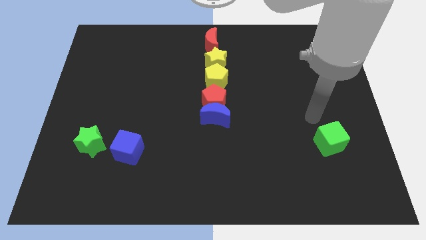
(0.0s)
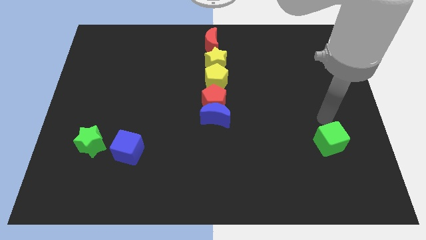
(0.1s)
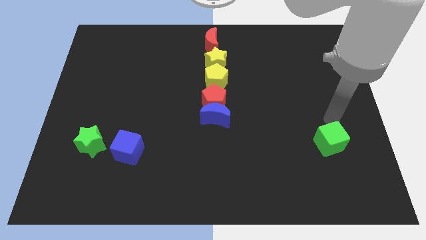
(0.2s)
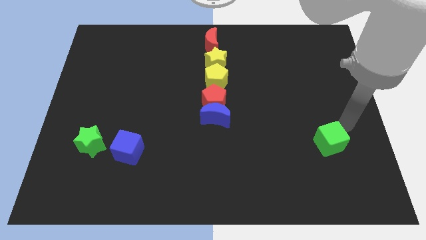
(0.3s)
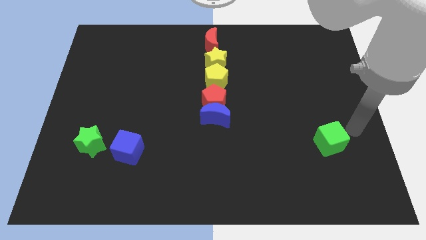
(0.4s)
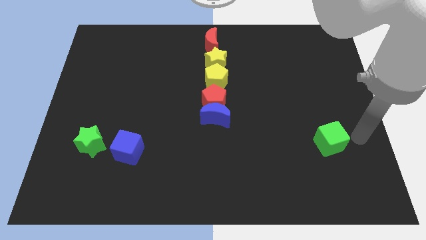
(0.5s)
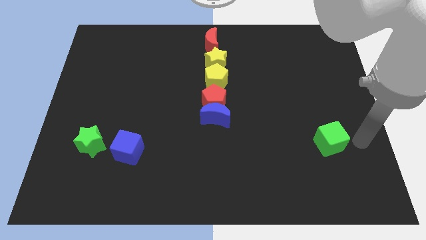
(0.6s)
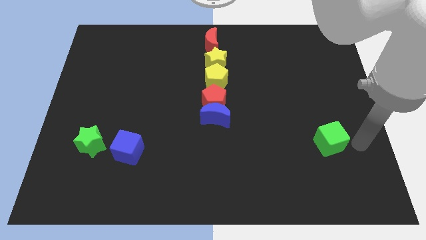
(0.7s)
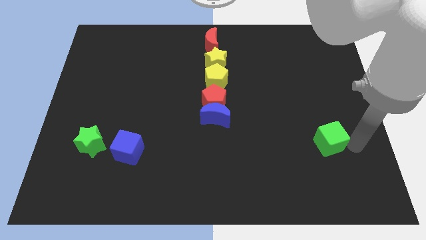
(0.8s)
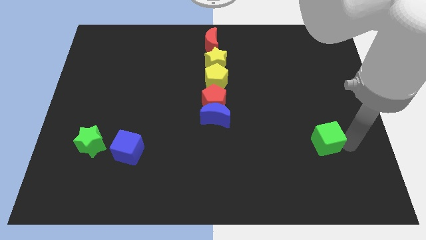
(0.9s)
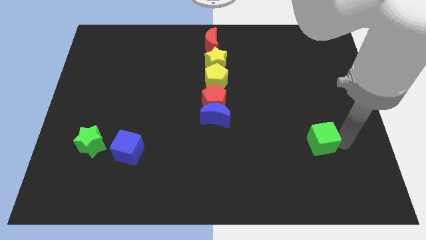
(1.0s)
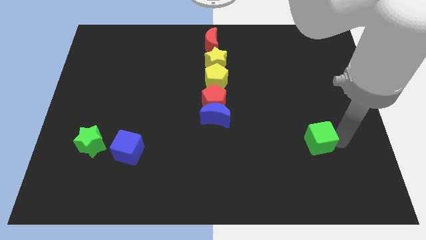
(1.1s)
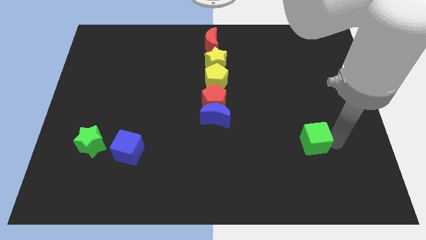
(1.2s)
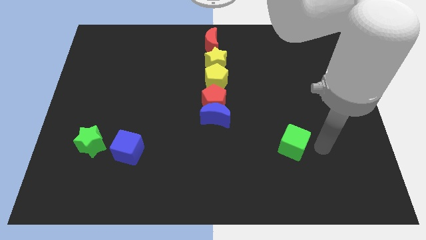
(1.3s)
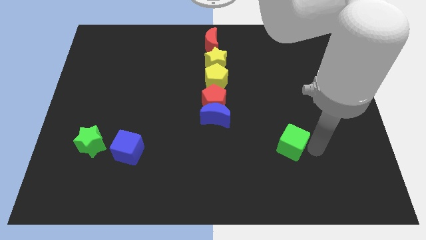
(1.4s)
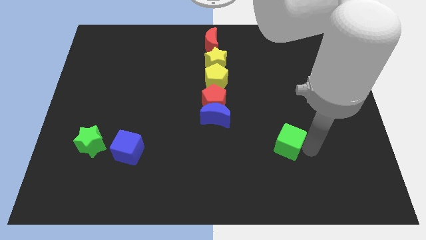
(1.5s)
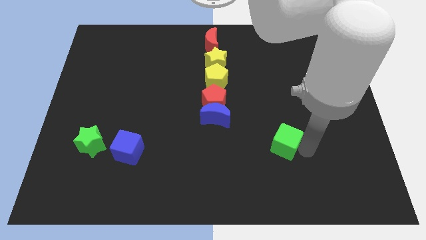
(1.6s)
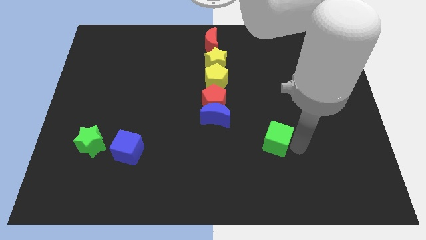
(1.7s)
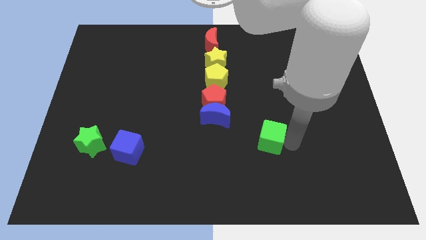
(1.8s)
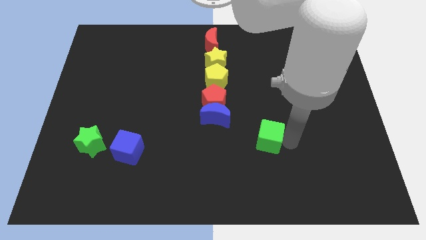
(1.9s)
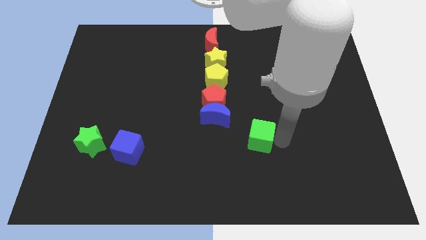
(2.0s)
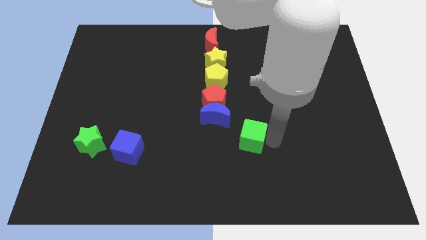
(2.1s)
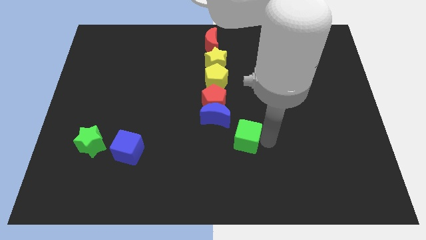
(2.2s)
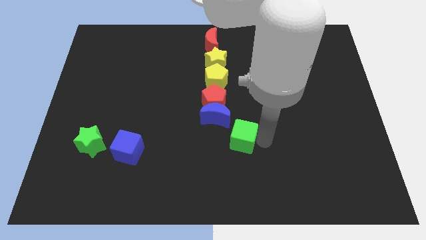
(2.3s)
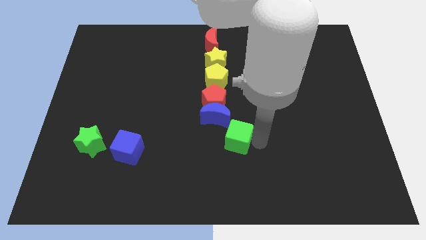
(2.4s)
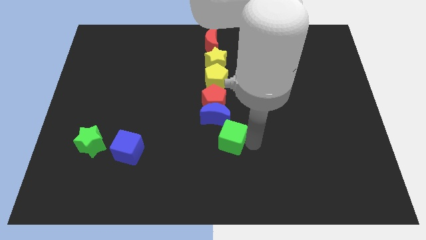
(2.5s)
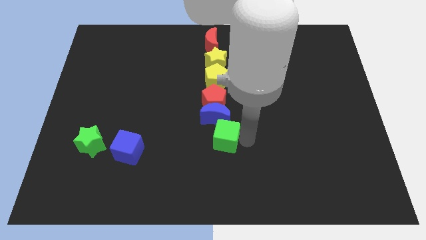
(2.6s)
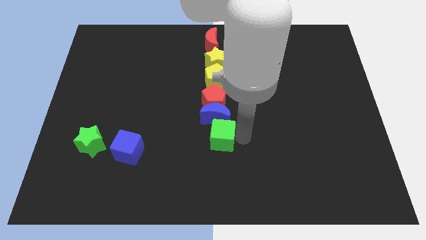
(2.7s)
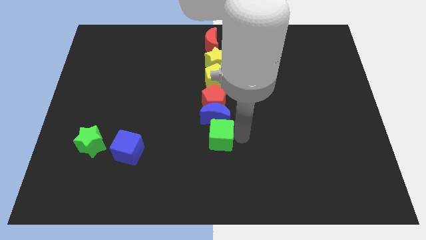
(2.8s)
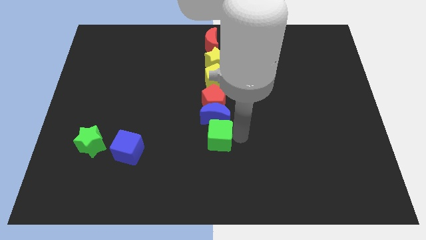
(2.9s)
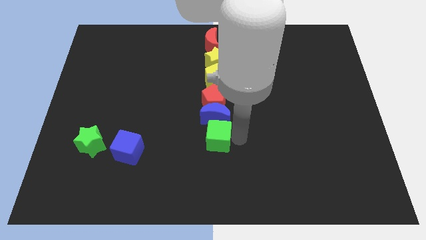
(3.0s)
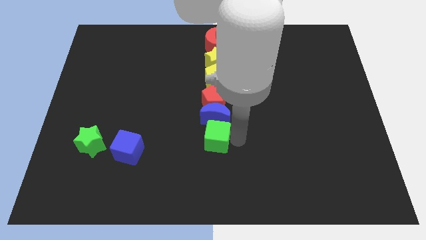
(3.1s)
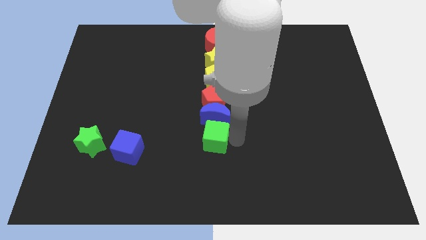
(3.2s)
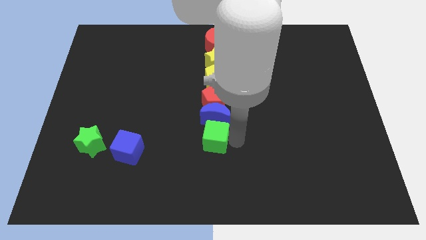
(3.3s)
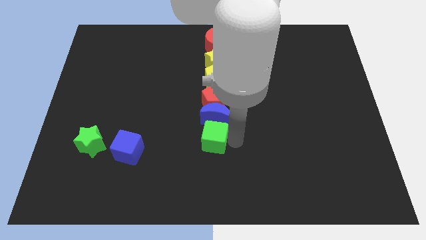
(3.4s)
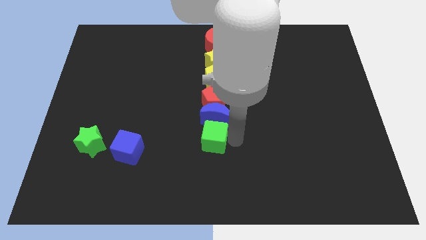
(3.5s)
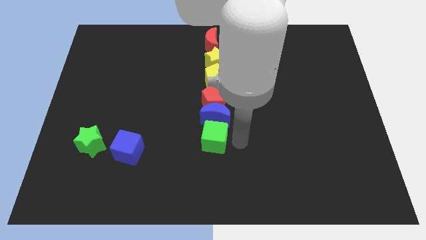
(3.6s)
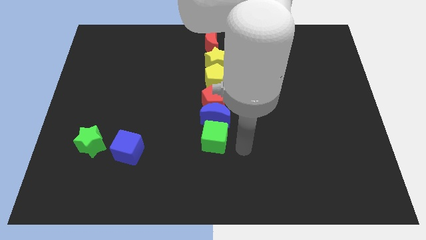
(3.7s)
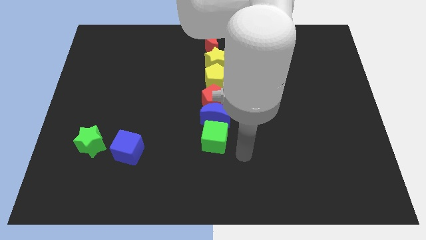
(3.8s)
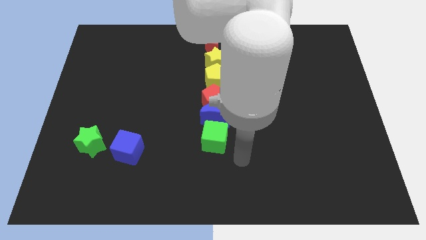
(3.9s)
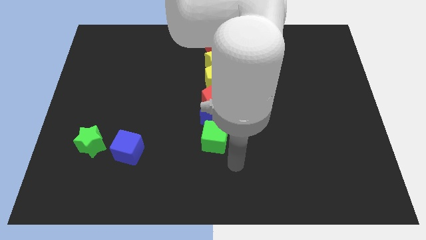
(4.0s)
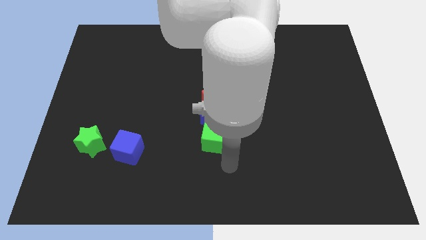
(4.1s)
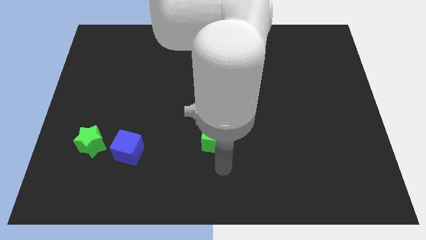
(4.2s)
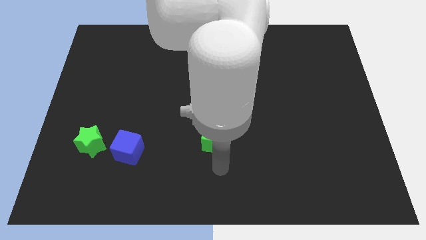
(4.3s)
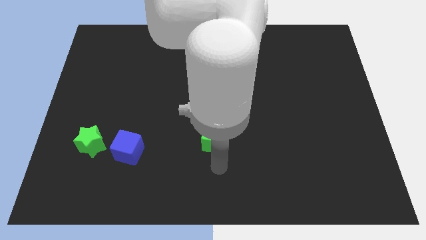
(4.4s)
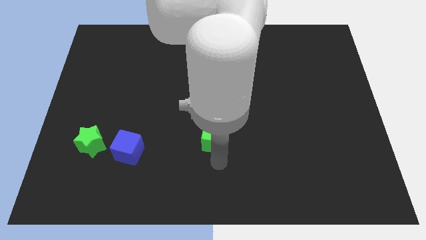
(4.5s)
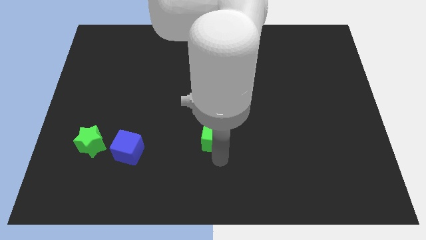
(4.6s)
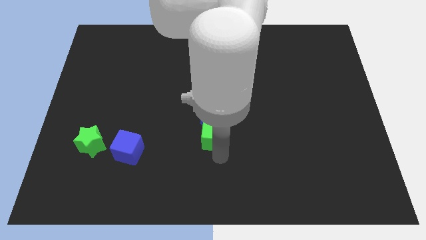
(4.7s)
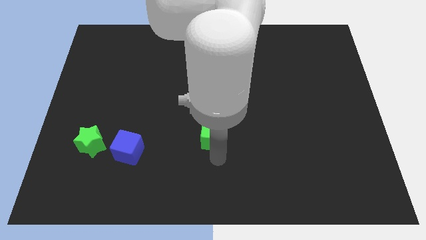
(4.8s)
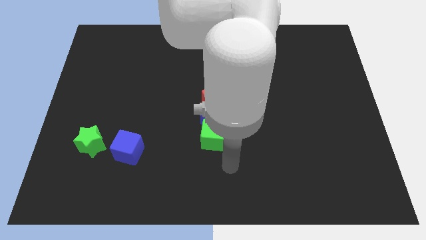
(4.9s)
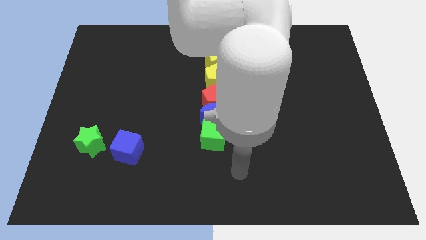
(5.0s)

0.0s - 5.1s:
push the green cube to the bottom side of the blue moon

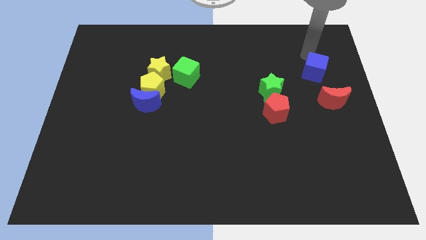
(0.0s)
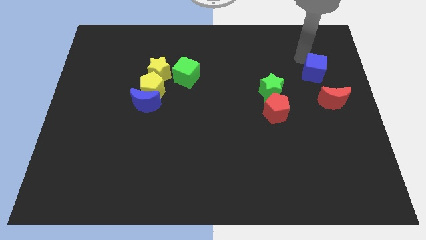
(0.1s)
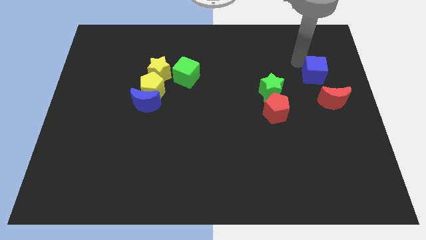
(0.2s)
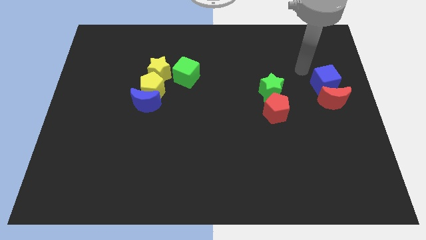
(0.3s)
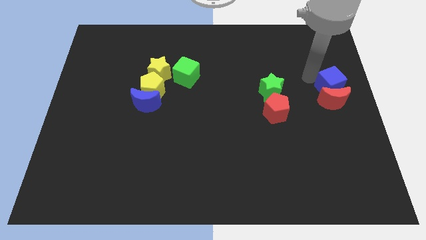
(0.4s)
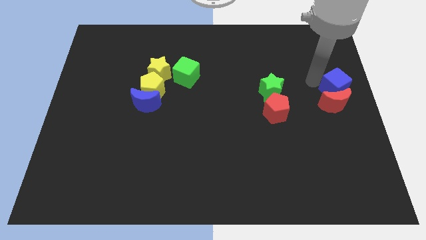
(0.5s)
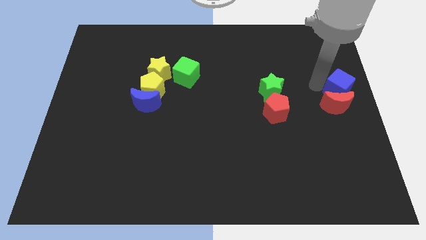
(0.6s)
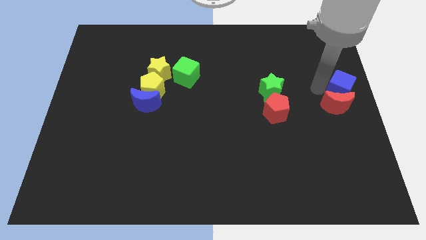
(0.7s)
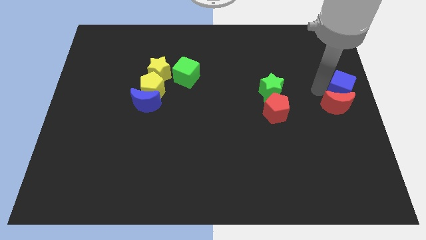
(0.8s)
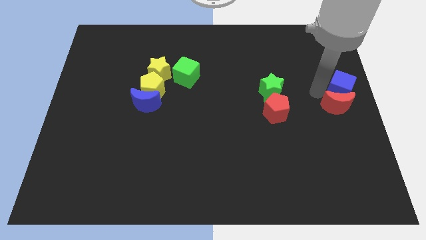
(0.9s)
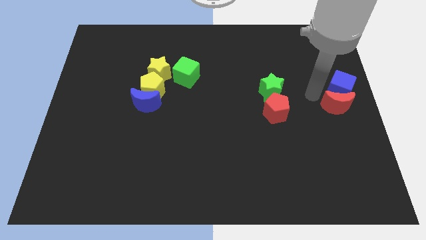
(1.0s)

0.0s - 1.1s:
push the blue cube into red crescent

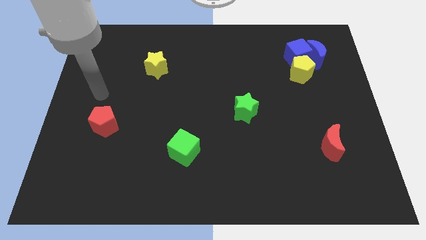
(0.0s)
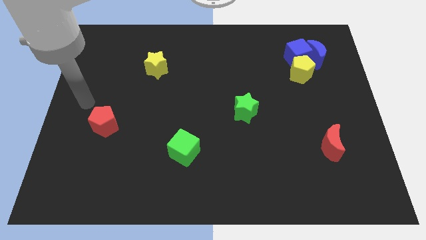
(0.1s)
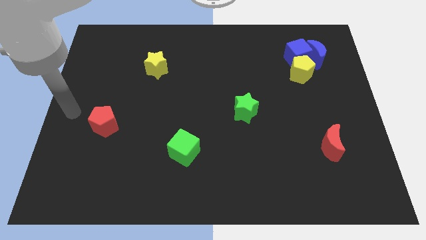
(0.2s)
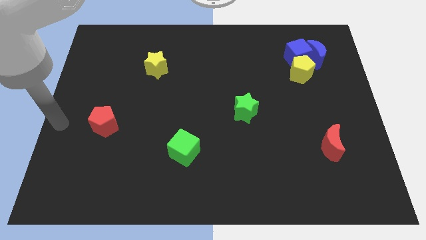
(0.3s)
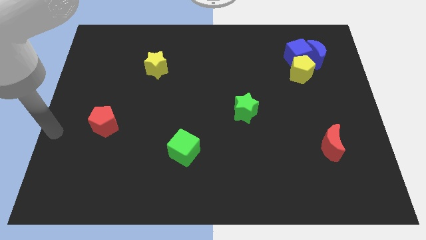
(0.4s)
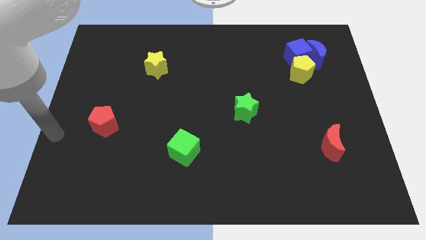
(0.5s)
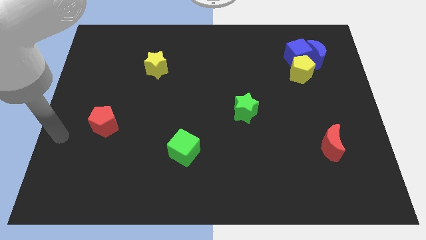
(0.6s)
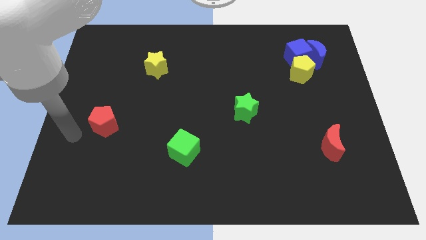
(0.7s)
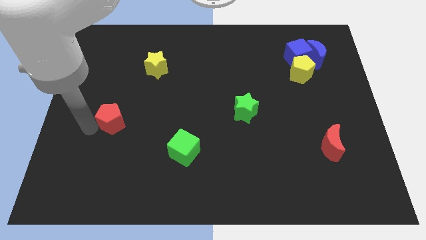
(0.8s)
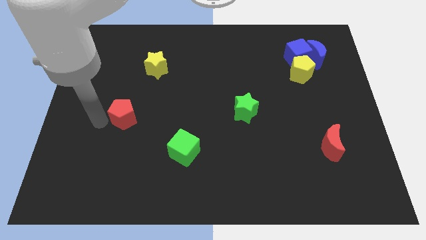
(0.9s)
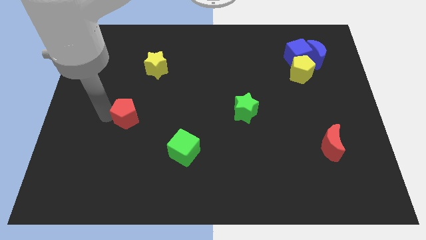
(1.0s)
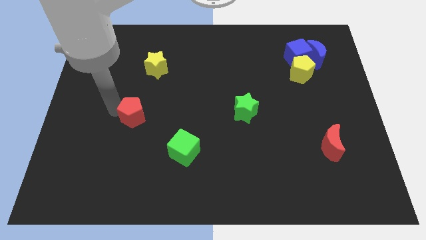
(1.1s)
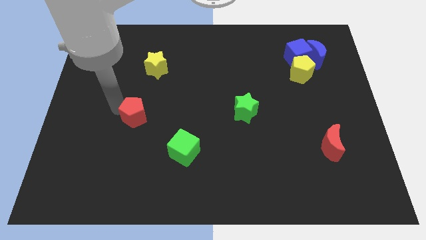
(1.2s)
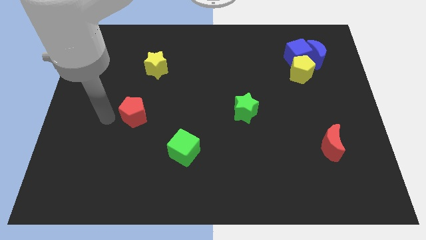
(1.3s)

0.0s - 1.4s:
slide the red pentagon slightly towards the right

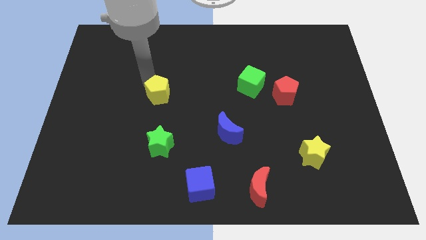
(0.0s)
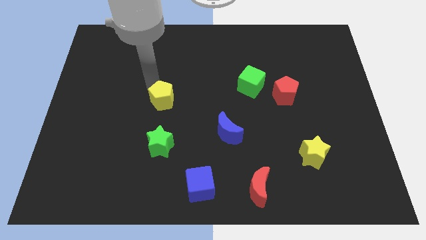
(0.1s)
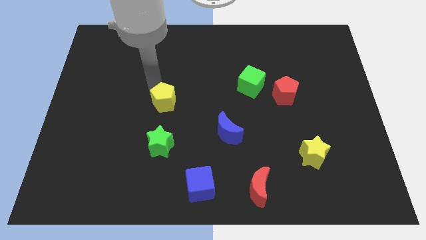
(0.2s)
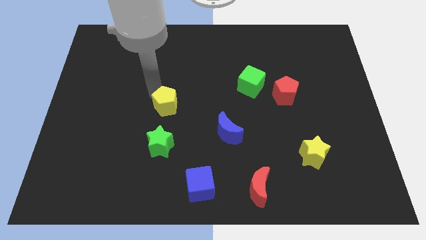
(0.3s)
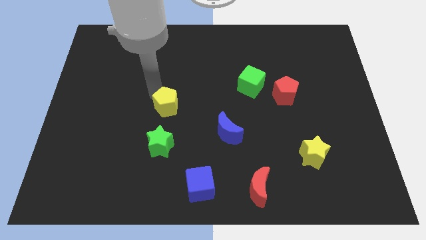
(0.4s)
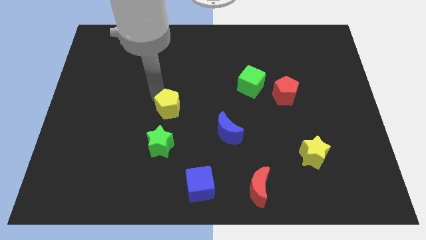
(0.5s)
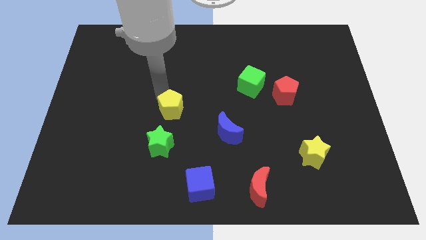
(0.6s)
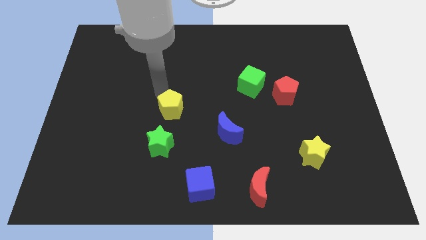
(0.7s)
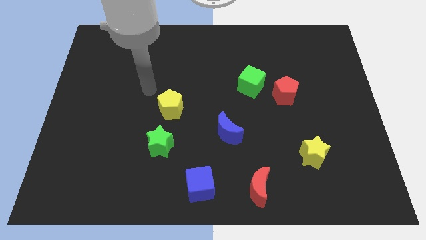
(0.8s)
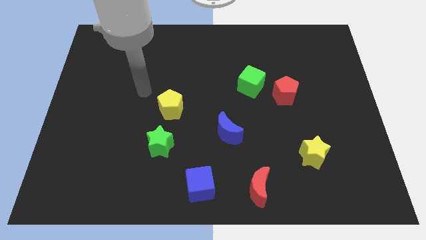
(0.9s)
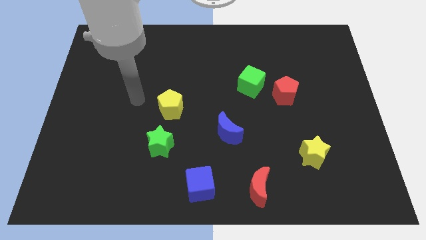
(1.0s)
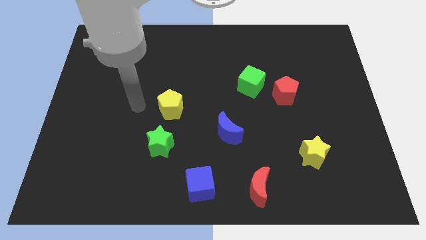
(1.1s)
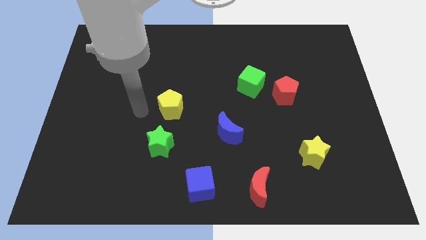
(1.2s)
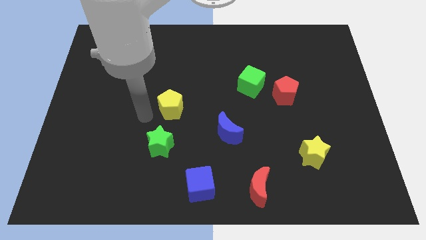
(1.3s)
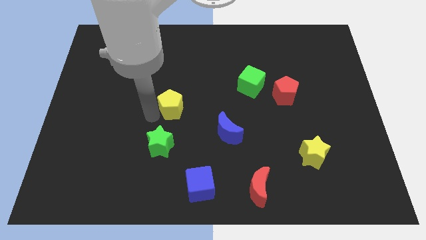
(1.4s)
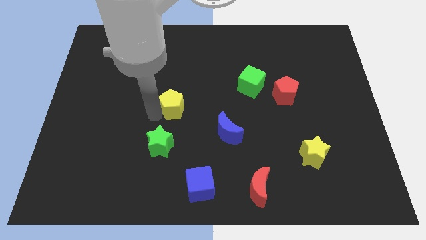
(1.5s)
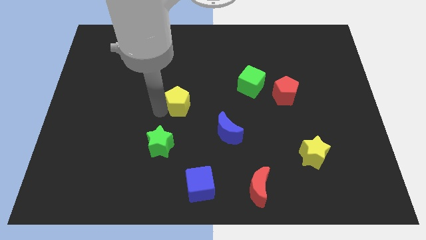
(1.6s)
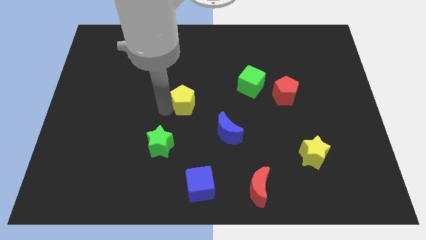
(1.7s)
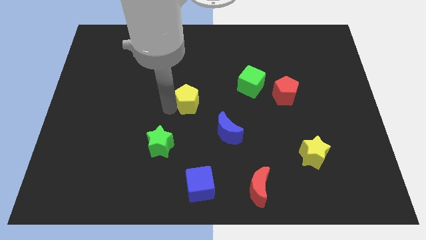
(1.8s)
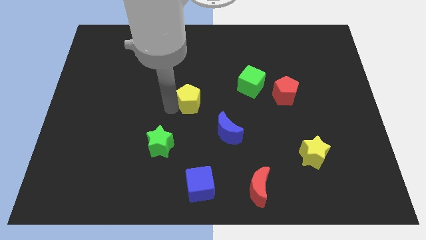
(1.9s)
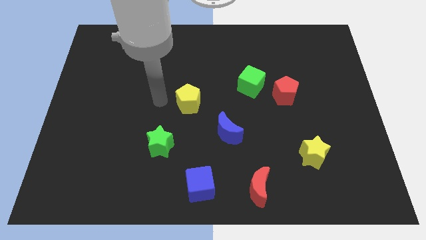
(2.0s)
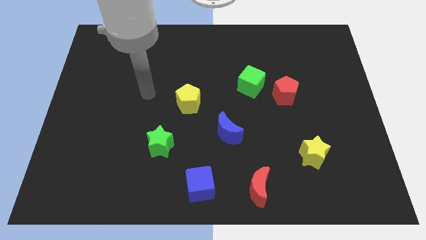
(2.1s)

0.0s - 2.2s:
place yellow pentagon to top left of blue moon
